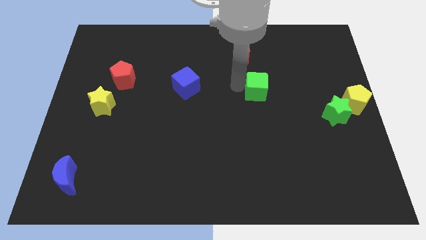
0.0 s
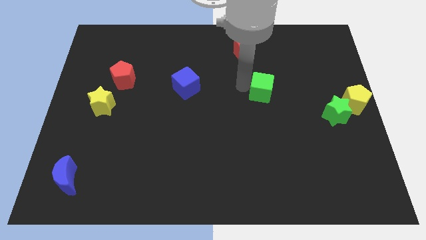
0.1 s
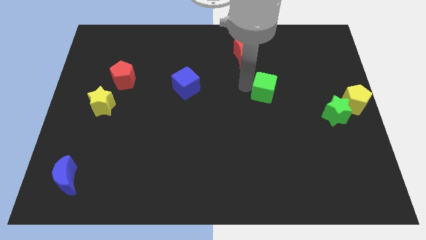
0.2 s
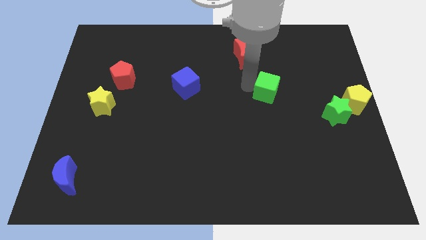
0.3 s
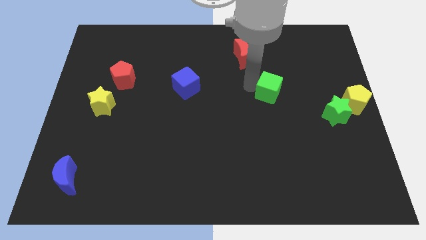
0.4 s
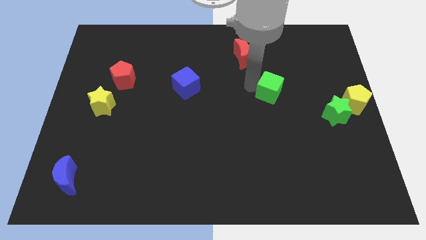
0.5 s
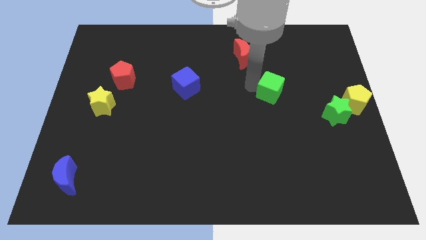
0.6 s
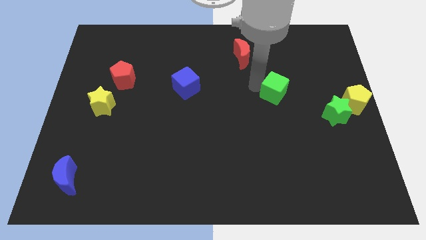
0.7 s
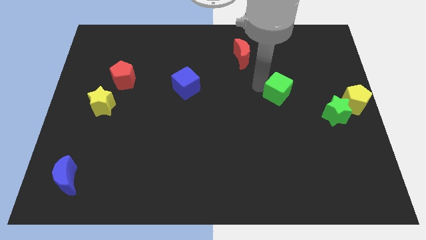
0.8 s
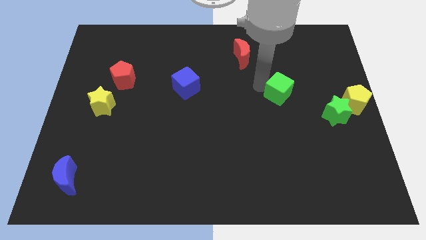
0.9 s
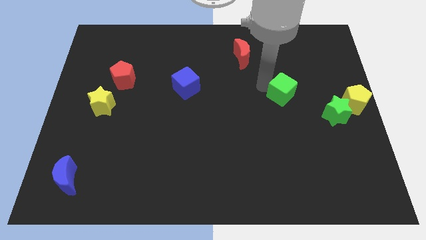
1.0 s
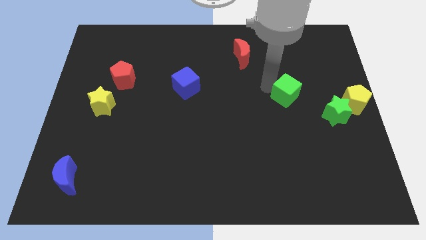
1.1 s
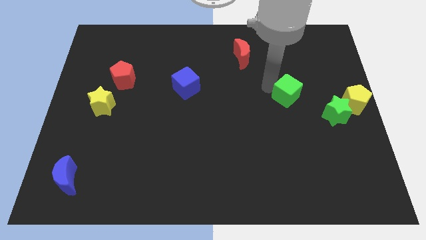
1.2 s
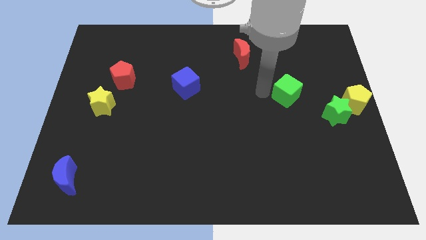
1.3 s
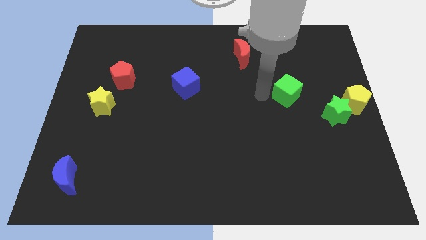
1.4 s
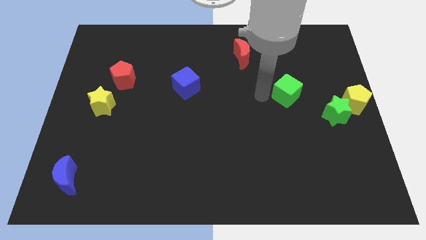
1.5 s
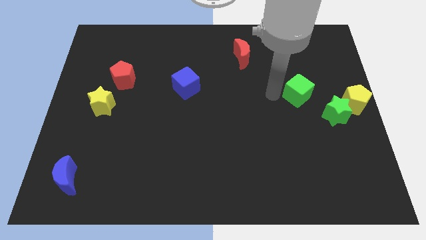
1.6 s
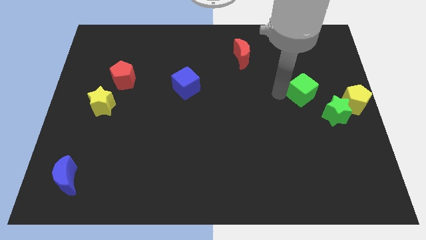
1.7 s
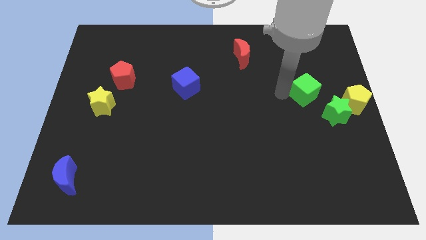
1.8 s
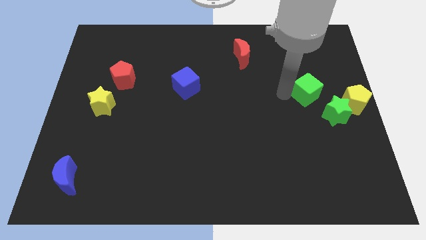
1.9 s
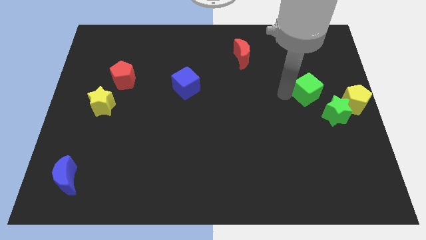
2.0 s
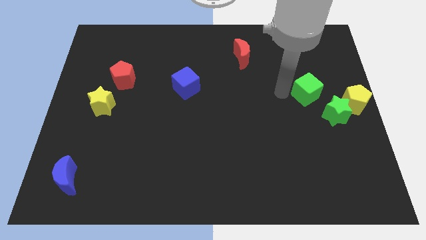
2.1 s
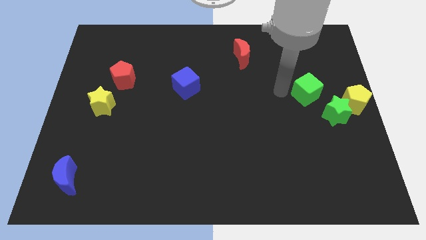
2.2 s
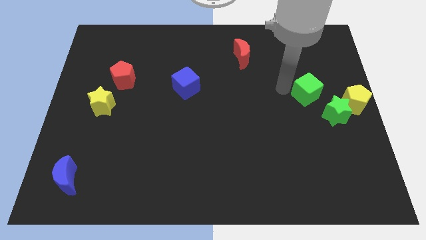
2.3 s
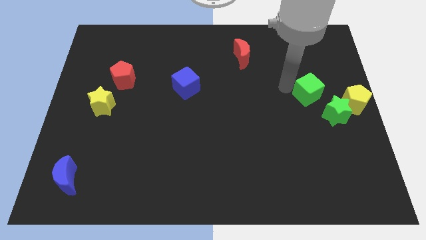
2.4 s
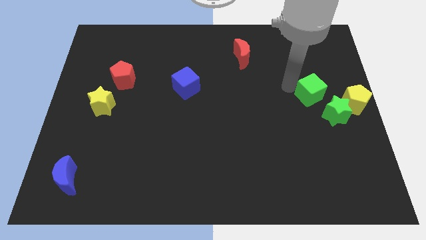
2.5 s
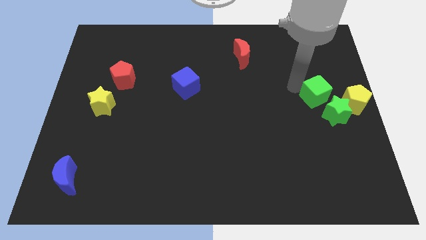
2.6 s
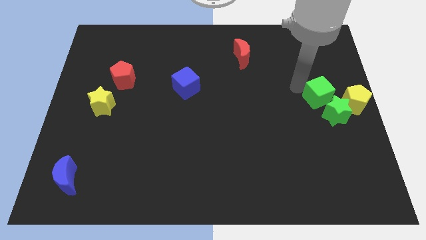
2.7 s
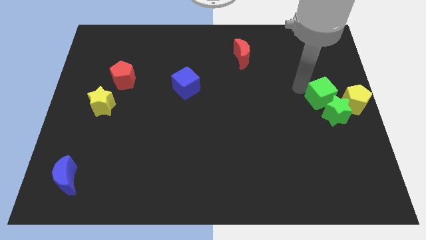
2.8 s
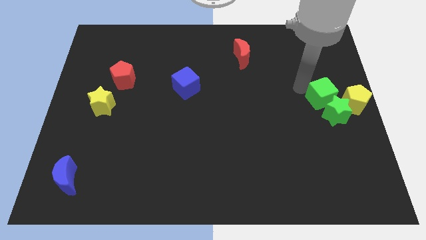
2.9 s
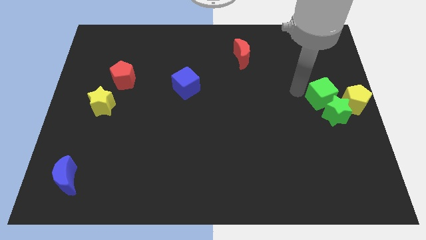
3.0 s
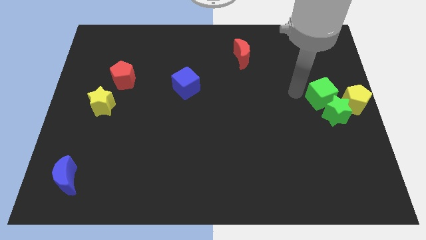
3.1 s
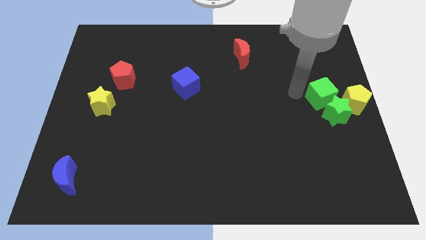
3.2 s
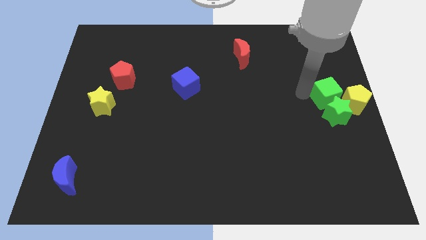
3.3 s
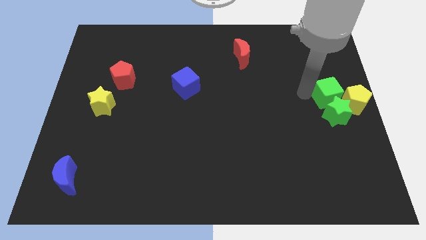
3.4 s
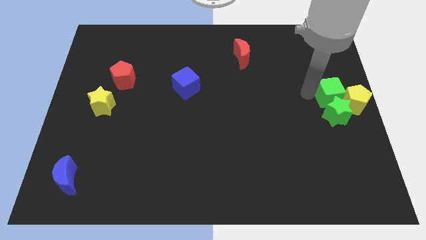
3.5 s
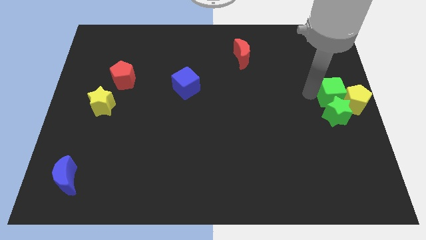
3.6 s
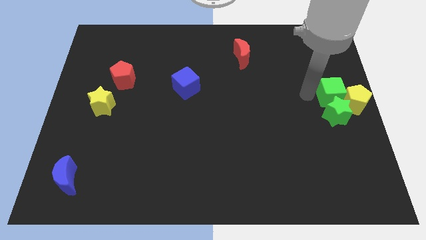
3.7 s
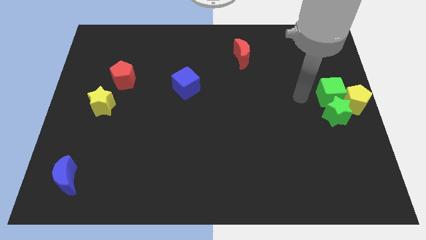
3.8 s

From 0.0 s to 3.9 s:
place the green cube above to the green star

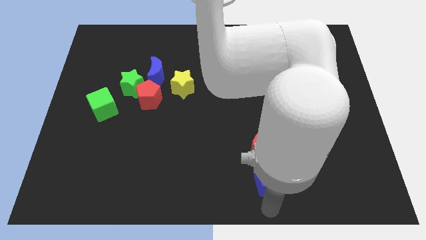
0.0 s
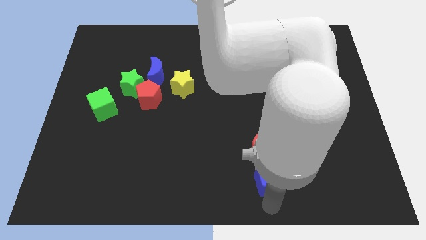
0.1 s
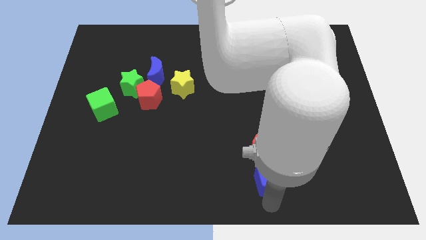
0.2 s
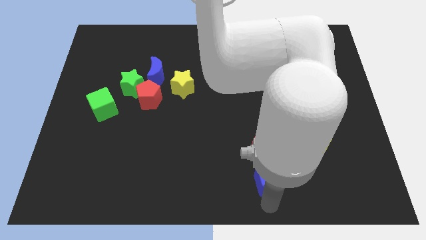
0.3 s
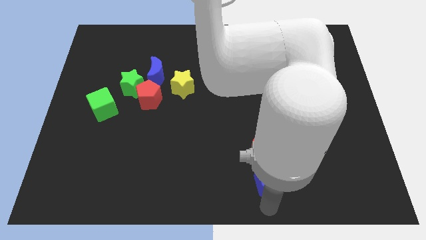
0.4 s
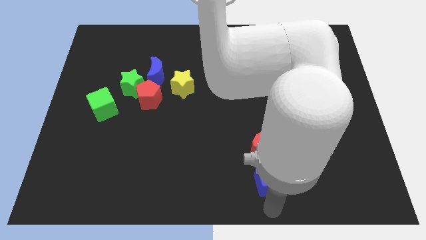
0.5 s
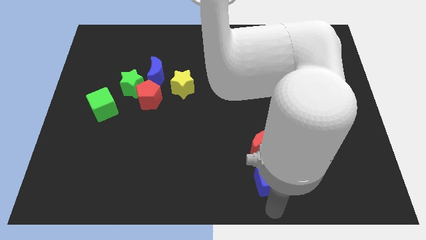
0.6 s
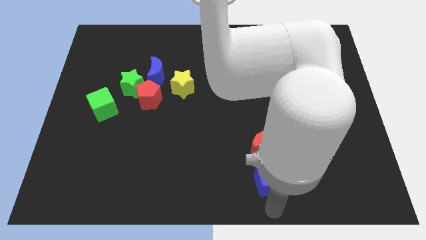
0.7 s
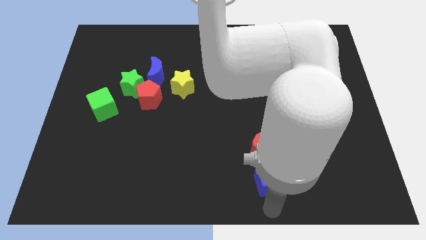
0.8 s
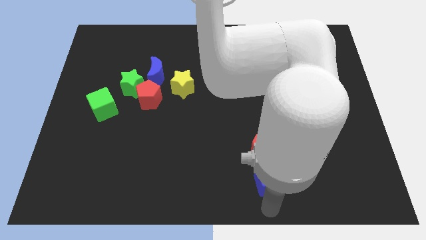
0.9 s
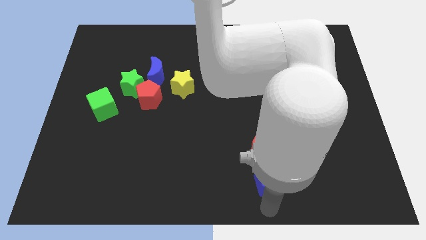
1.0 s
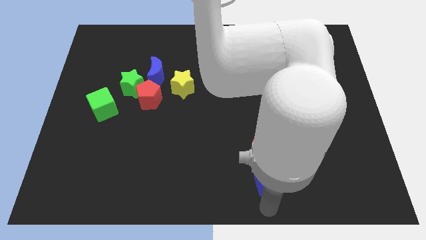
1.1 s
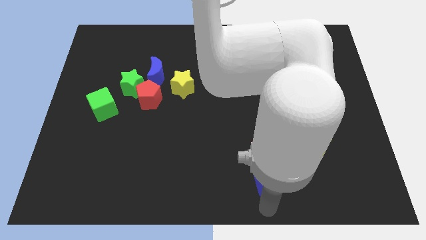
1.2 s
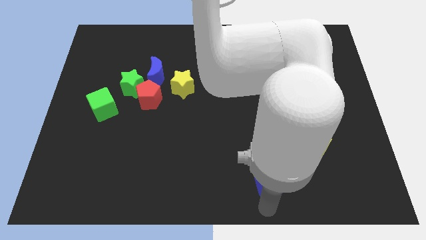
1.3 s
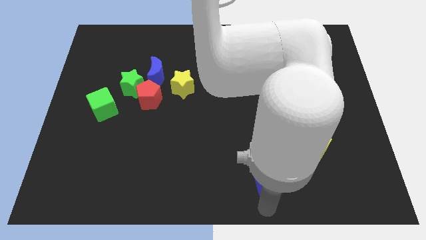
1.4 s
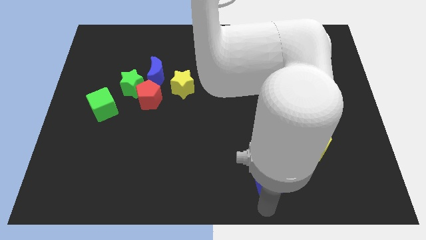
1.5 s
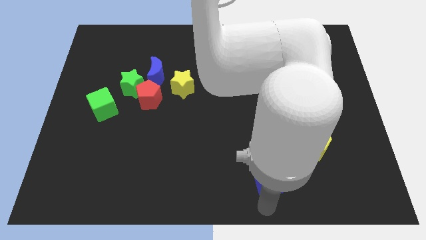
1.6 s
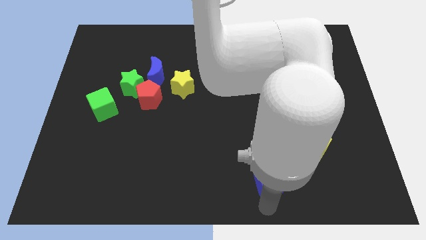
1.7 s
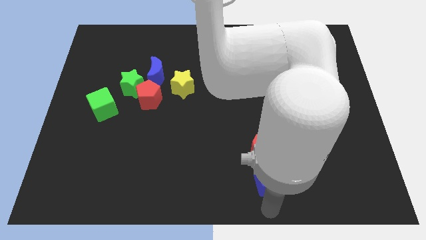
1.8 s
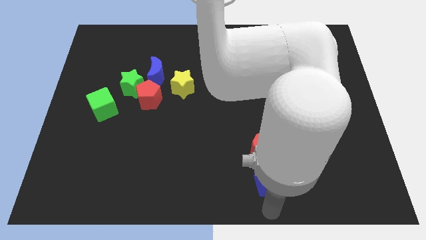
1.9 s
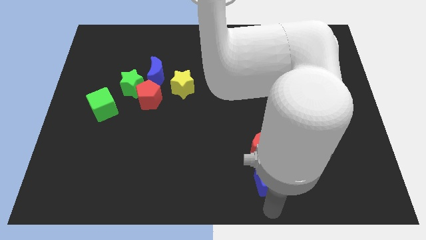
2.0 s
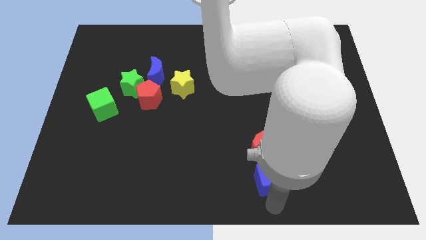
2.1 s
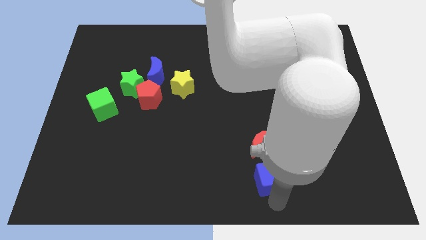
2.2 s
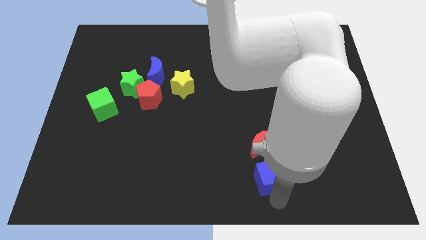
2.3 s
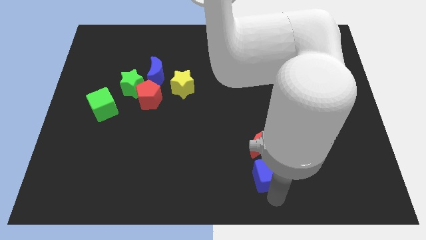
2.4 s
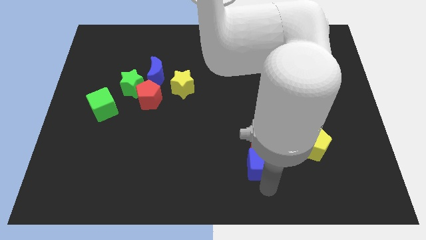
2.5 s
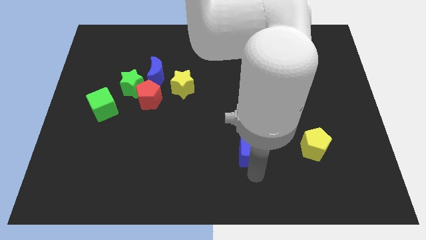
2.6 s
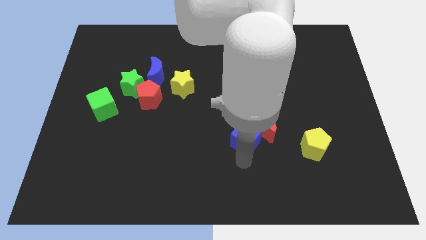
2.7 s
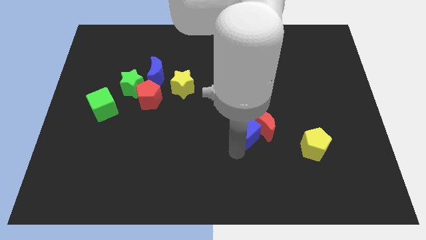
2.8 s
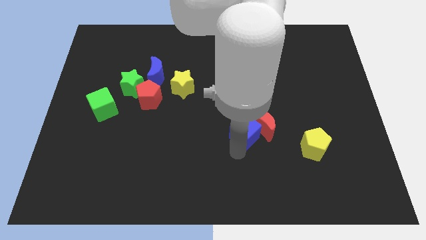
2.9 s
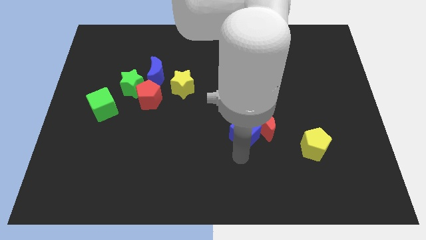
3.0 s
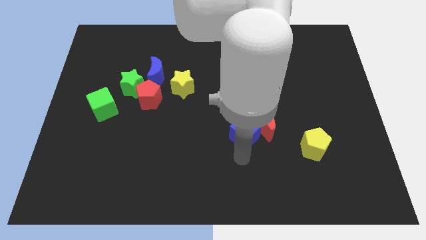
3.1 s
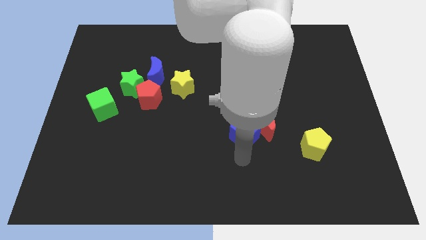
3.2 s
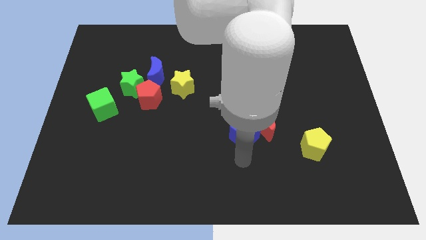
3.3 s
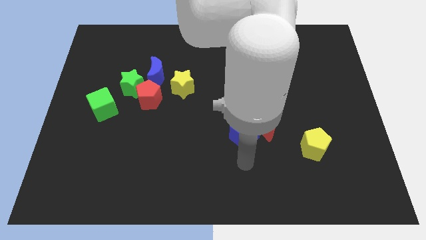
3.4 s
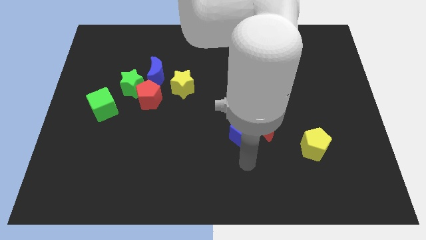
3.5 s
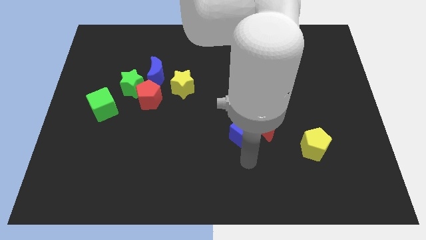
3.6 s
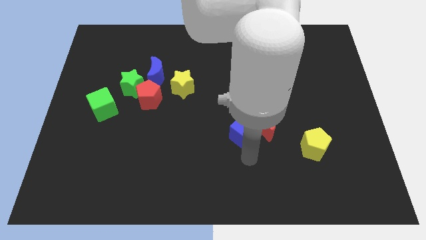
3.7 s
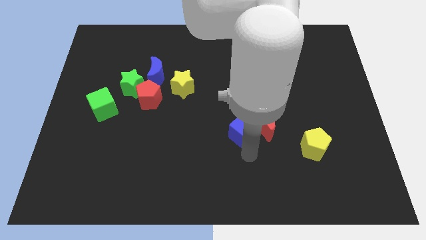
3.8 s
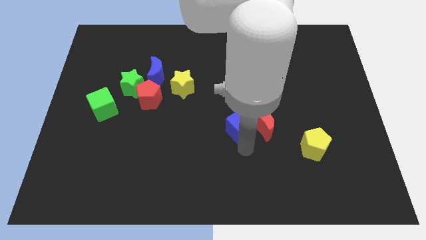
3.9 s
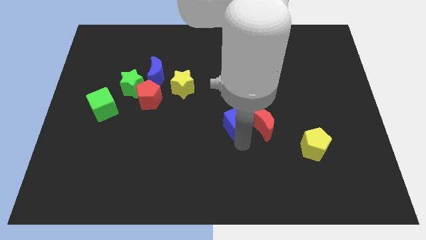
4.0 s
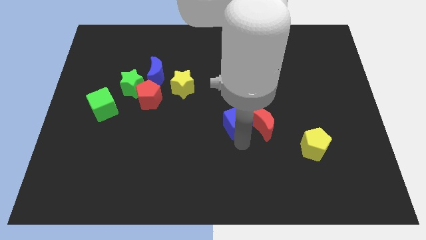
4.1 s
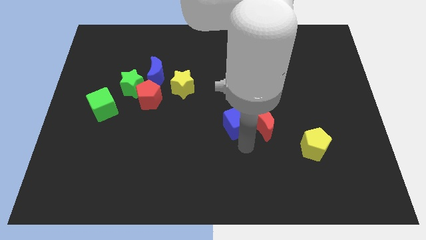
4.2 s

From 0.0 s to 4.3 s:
place the blue cube at the left side of the red crescent

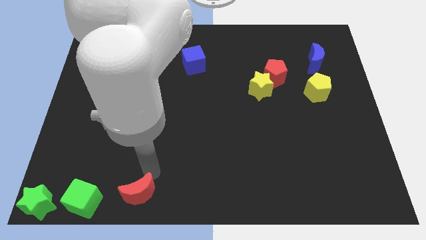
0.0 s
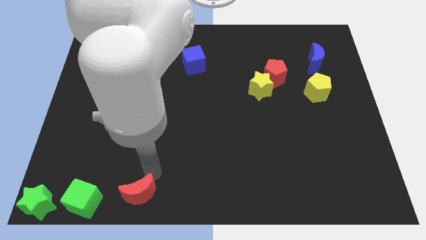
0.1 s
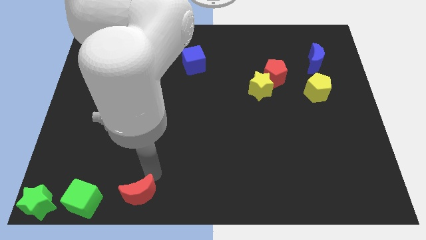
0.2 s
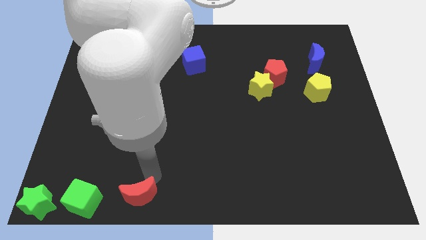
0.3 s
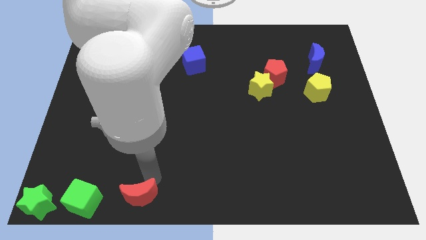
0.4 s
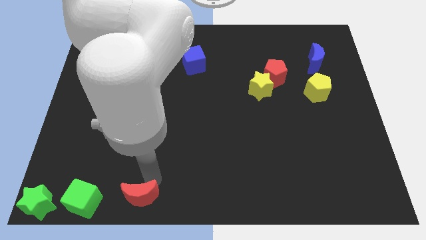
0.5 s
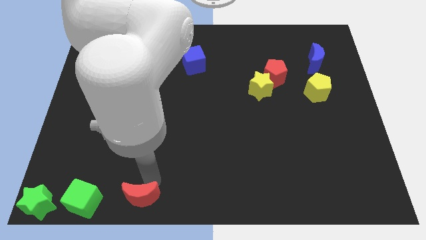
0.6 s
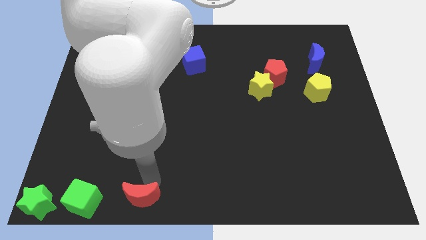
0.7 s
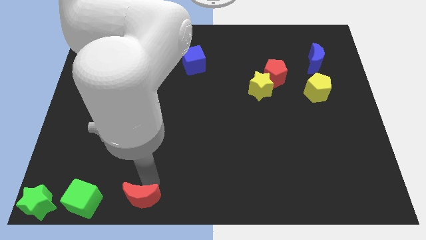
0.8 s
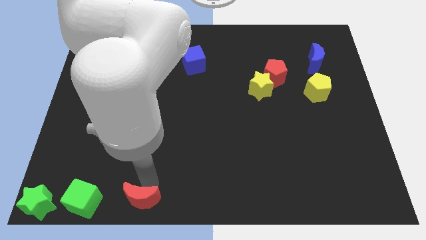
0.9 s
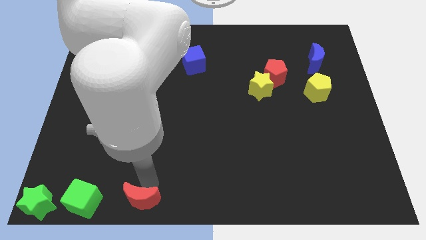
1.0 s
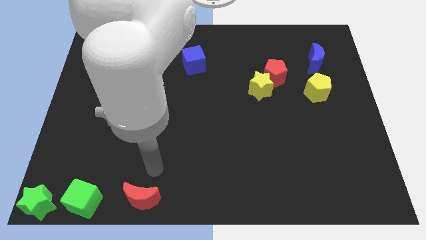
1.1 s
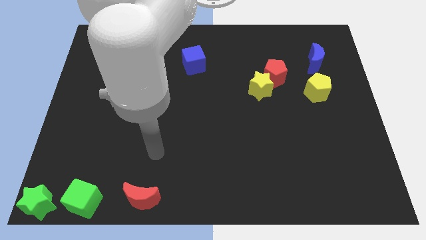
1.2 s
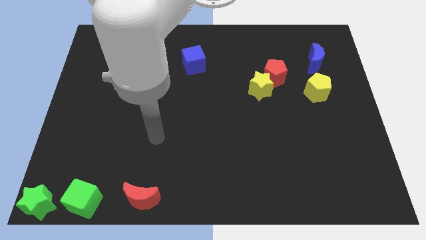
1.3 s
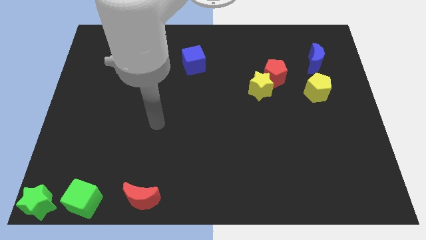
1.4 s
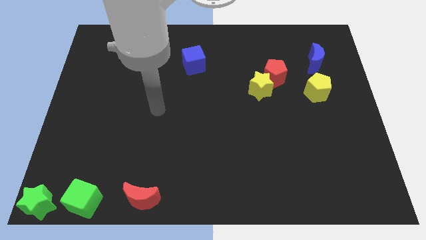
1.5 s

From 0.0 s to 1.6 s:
adjust the red moon right to the green cube
